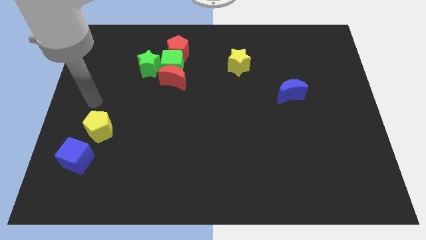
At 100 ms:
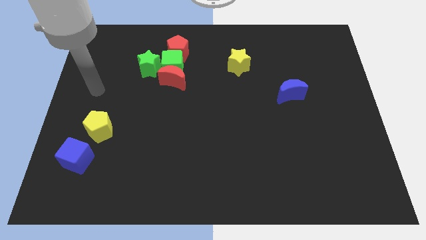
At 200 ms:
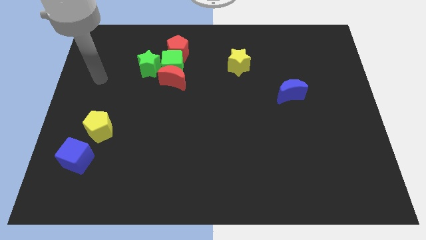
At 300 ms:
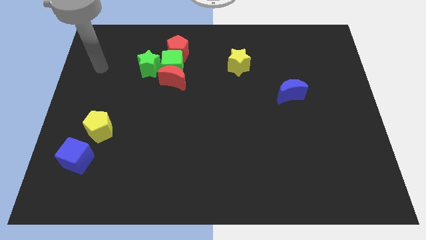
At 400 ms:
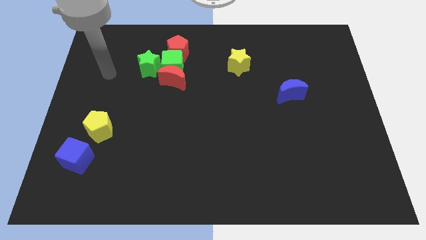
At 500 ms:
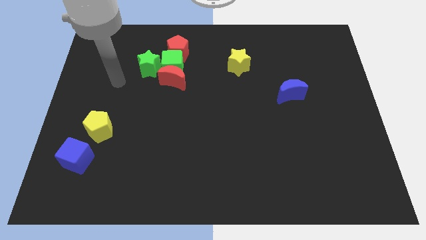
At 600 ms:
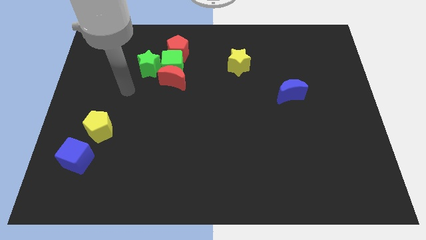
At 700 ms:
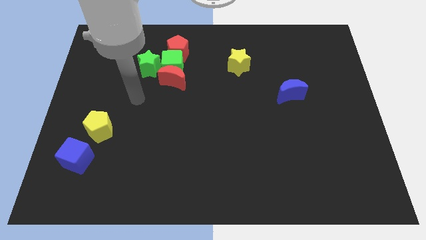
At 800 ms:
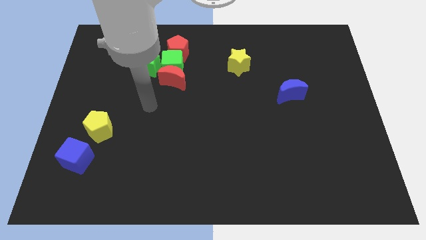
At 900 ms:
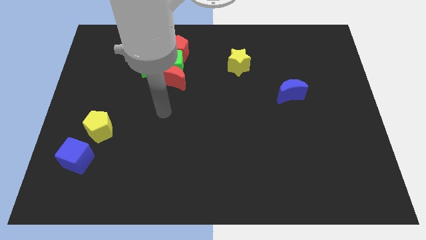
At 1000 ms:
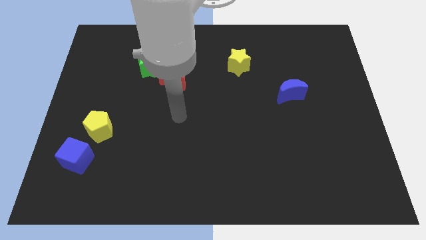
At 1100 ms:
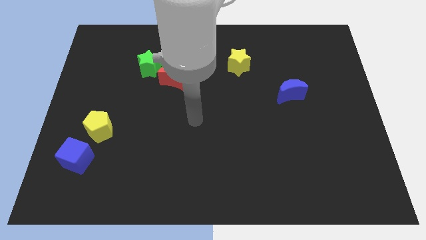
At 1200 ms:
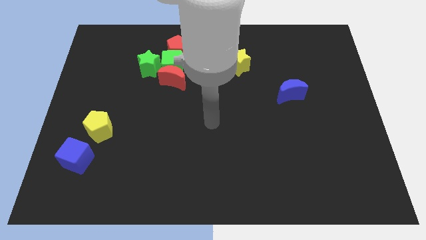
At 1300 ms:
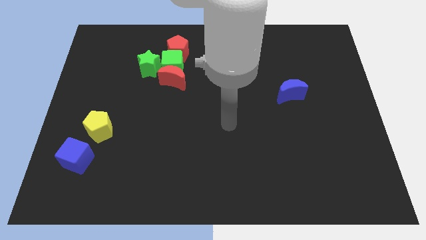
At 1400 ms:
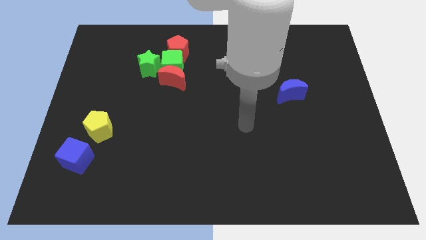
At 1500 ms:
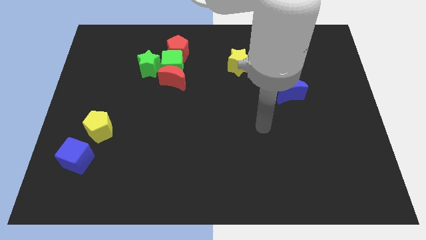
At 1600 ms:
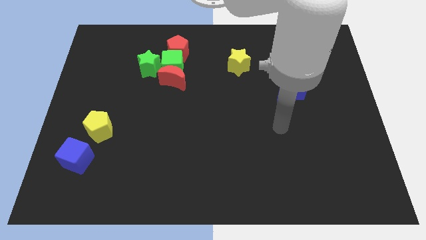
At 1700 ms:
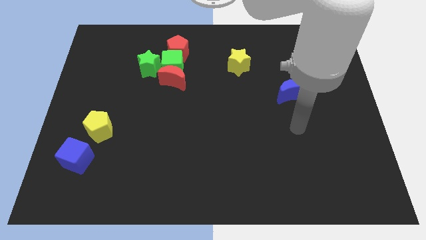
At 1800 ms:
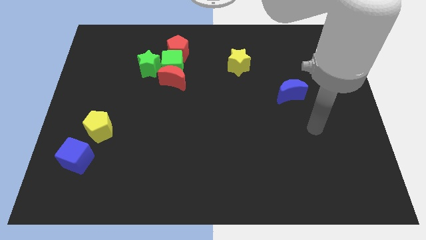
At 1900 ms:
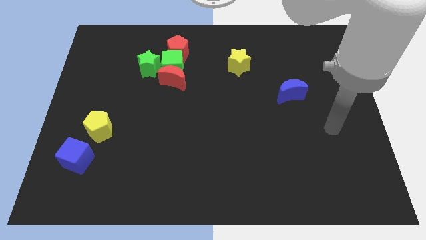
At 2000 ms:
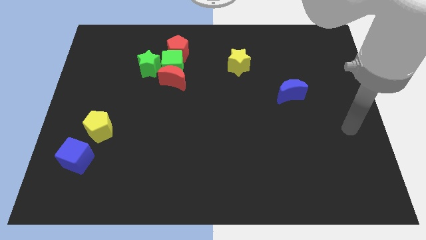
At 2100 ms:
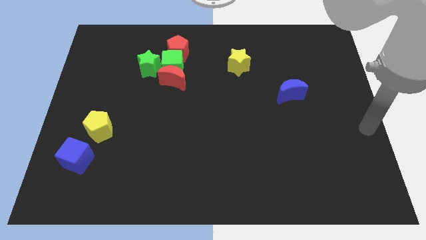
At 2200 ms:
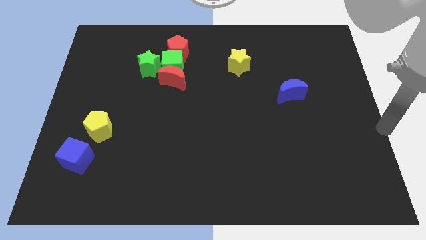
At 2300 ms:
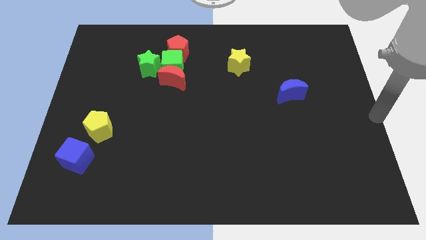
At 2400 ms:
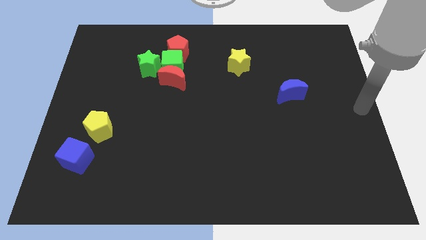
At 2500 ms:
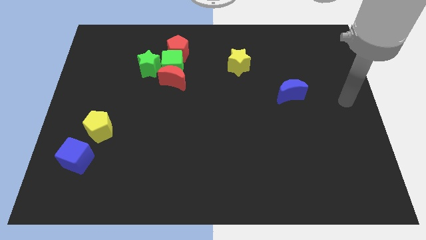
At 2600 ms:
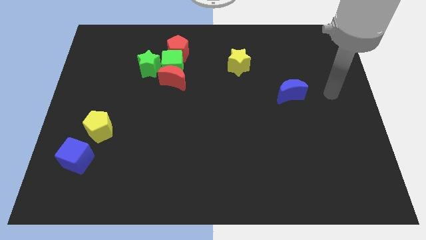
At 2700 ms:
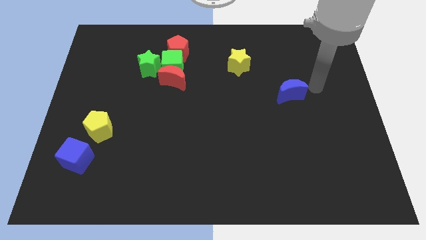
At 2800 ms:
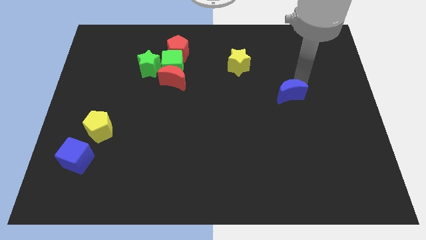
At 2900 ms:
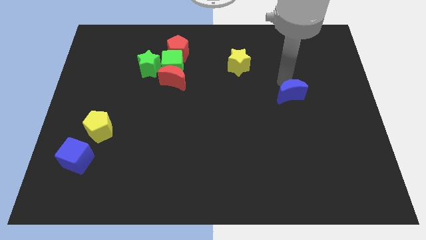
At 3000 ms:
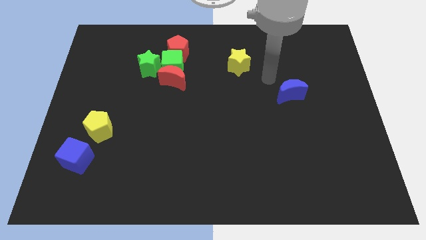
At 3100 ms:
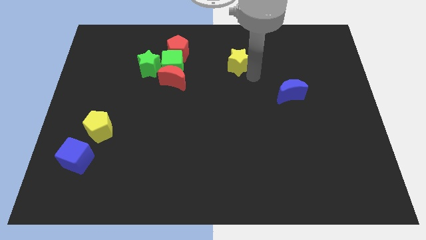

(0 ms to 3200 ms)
move your arm towards the yellow star

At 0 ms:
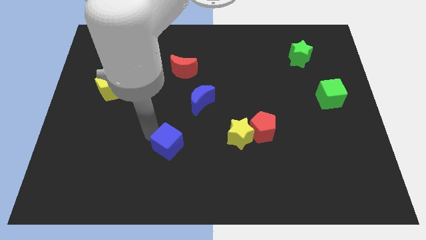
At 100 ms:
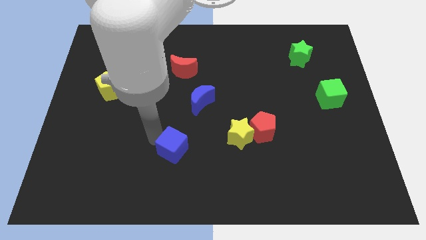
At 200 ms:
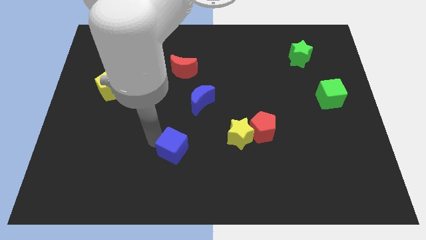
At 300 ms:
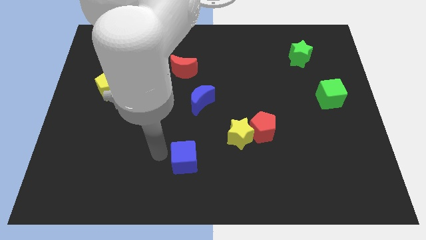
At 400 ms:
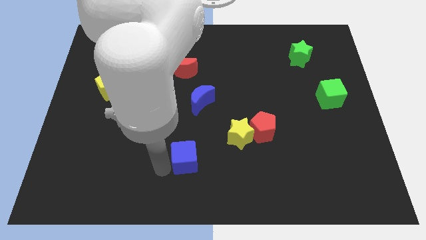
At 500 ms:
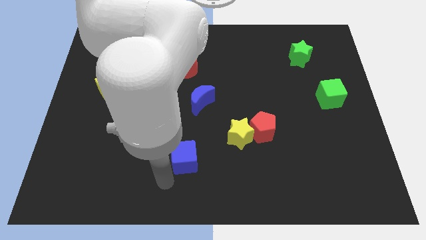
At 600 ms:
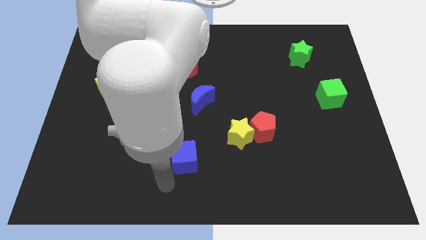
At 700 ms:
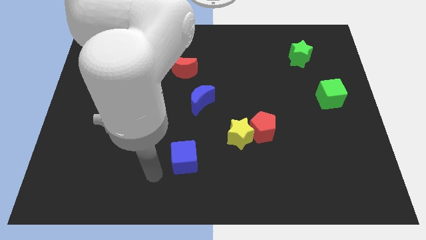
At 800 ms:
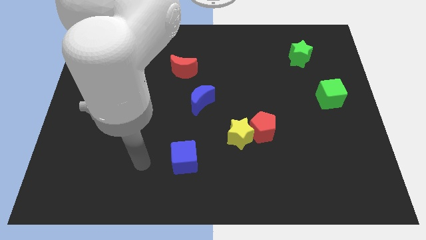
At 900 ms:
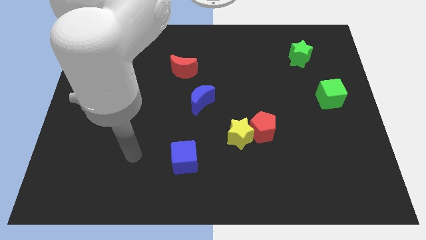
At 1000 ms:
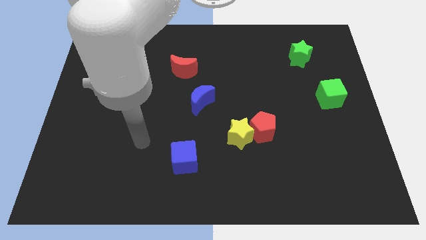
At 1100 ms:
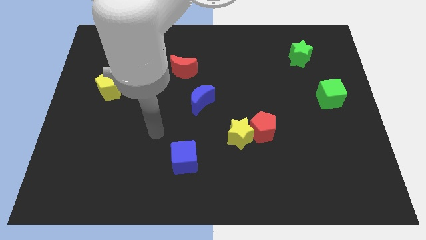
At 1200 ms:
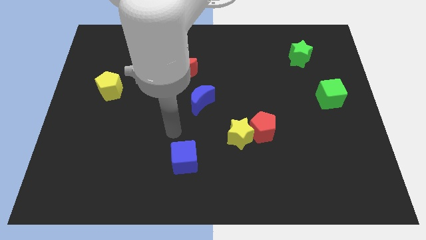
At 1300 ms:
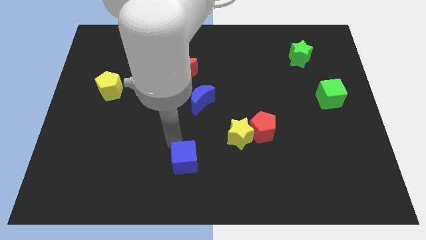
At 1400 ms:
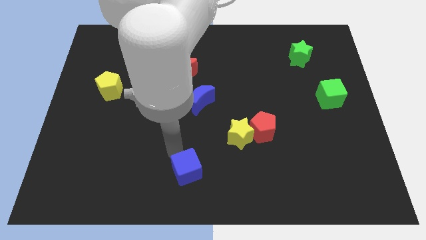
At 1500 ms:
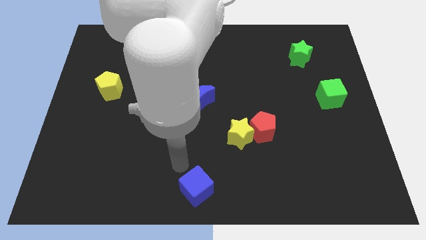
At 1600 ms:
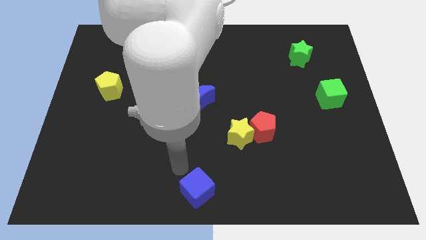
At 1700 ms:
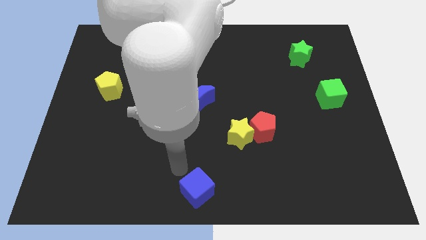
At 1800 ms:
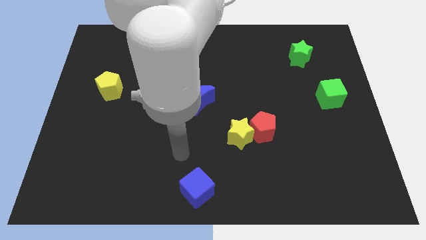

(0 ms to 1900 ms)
push the blue cube to the bottom of the cube

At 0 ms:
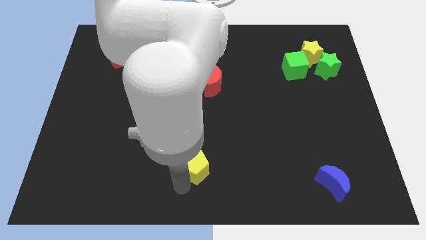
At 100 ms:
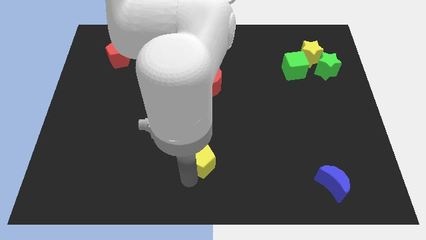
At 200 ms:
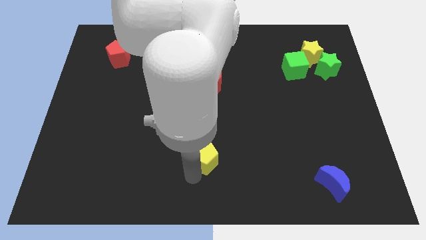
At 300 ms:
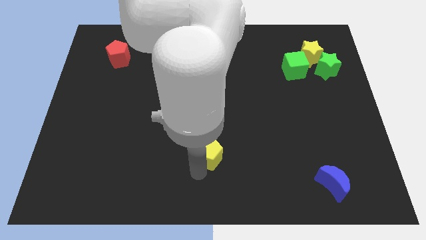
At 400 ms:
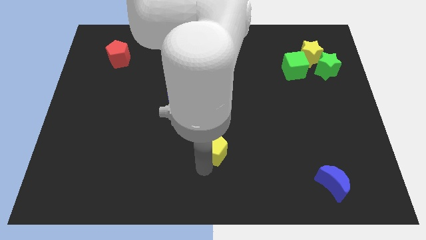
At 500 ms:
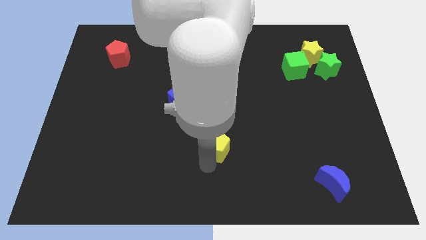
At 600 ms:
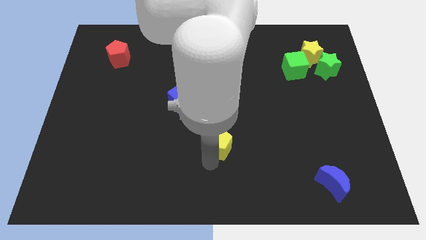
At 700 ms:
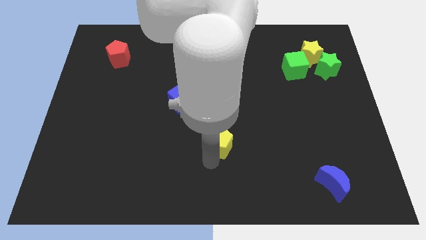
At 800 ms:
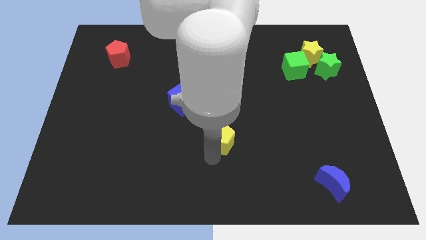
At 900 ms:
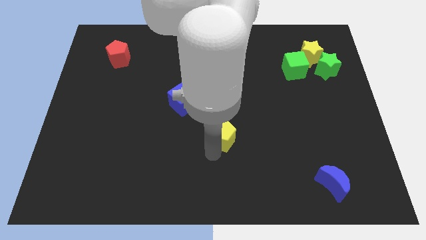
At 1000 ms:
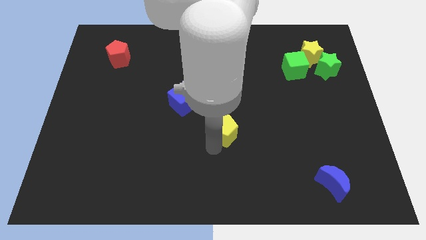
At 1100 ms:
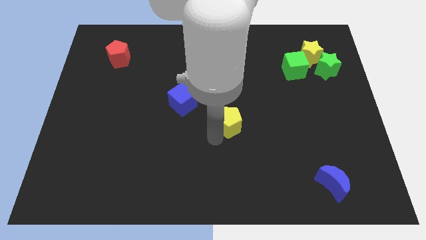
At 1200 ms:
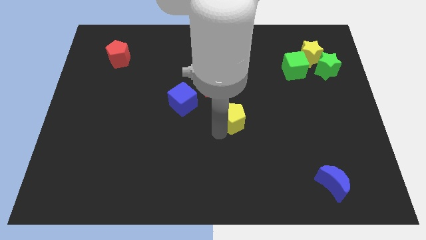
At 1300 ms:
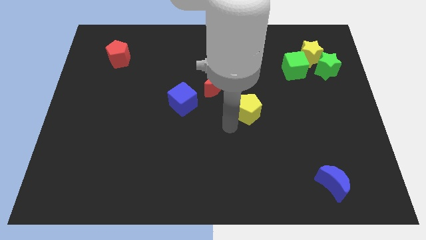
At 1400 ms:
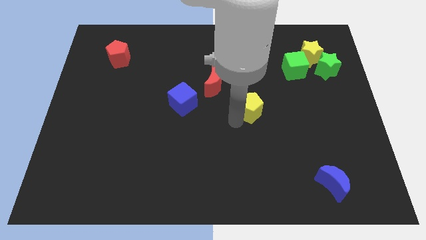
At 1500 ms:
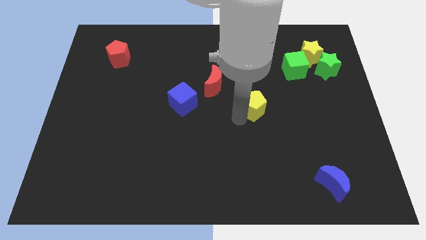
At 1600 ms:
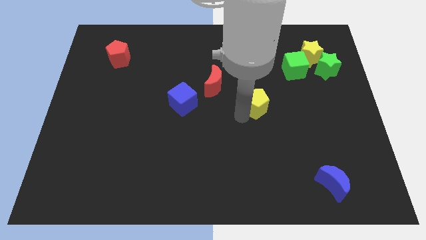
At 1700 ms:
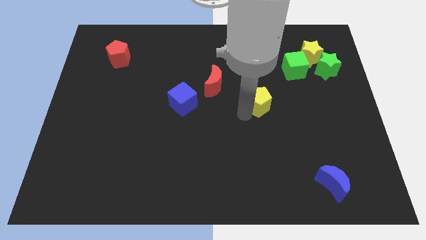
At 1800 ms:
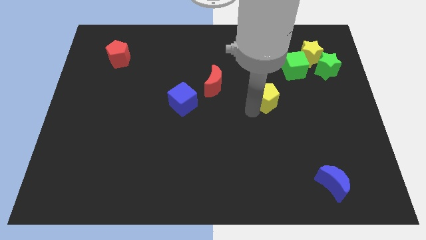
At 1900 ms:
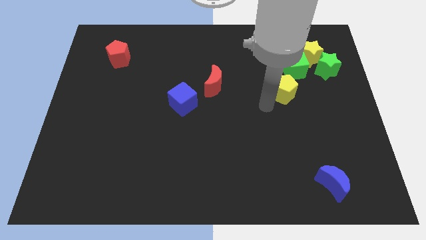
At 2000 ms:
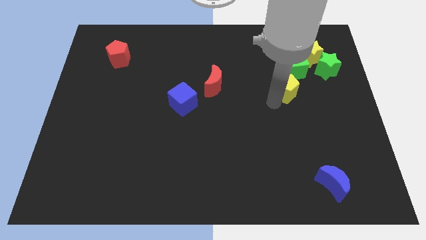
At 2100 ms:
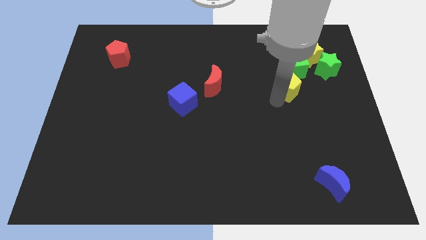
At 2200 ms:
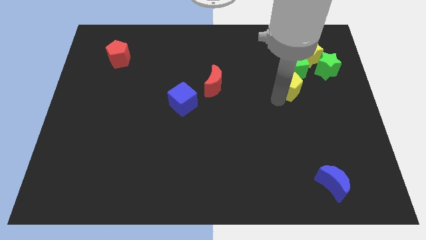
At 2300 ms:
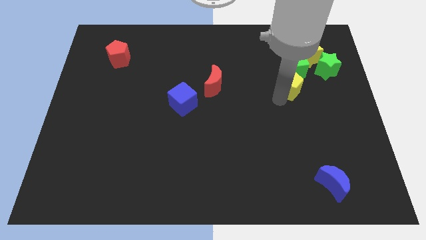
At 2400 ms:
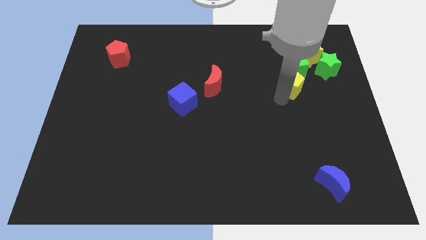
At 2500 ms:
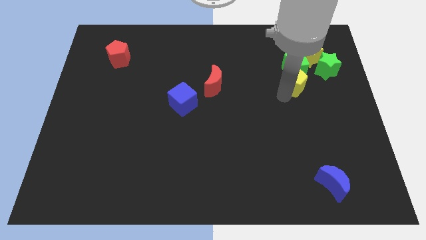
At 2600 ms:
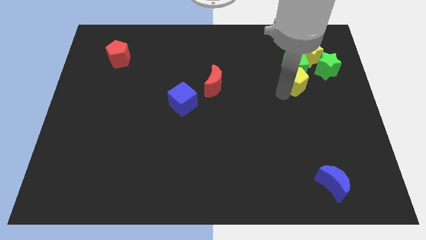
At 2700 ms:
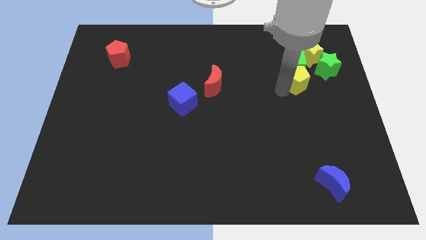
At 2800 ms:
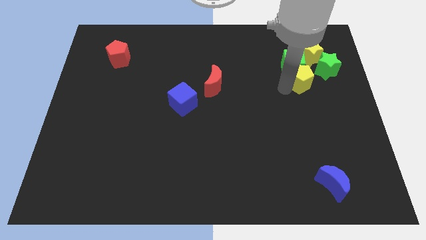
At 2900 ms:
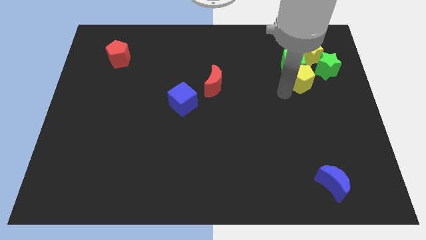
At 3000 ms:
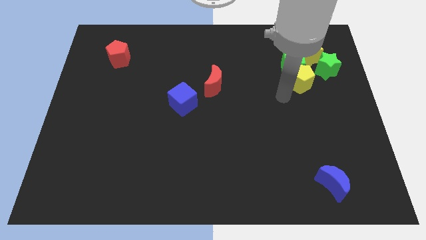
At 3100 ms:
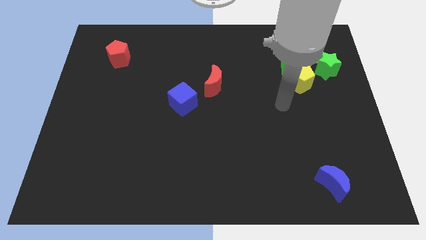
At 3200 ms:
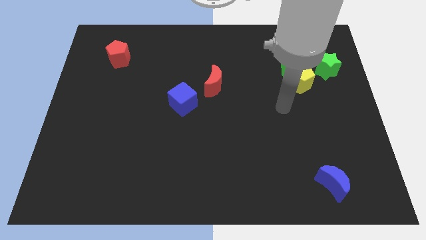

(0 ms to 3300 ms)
push yellow pentagon in to green cube

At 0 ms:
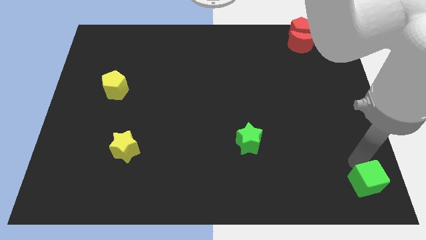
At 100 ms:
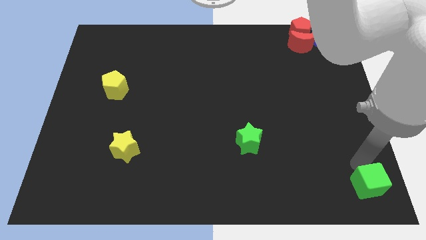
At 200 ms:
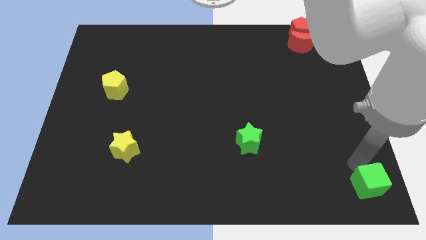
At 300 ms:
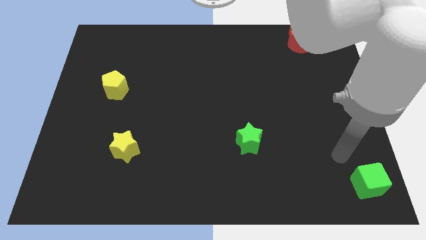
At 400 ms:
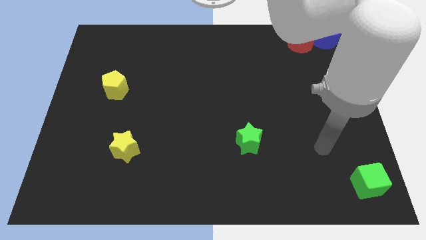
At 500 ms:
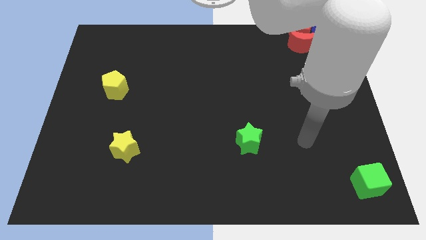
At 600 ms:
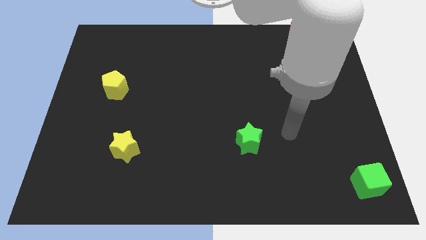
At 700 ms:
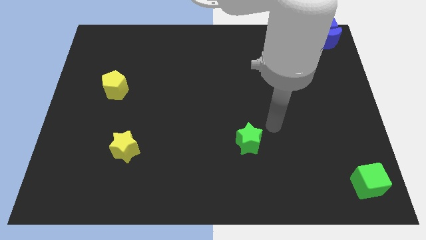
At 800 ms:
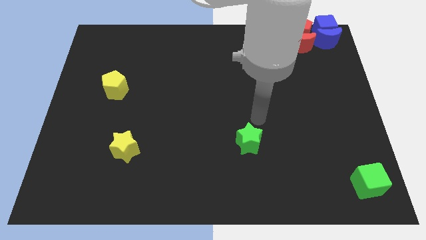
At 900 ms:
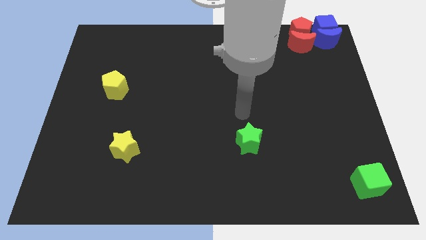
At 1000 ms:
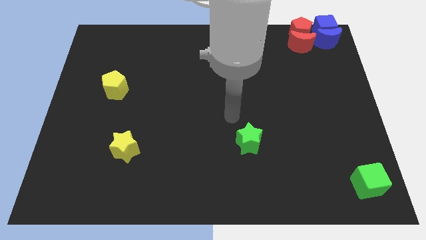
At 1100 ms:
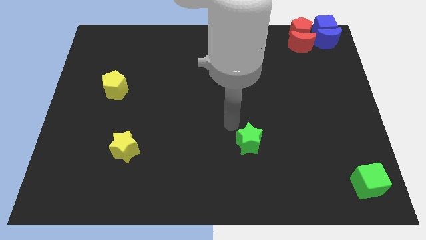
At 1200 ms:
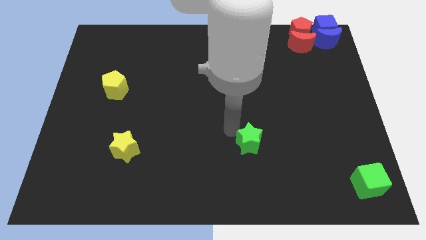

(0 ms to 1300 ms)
move the arm over the green star
